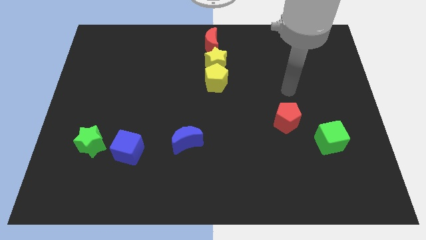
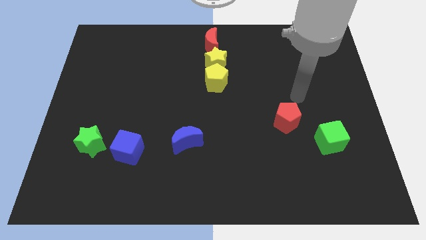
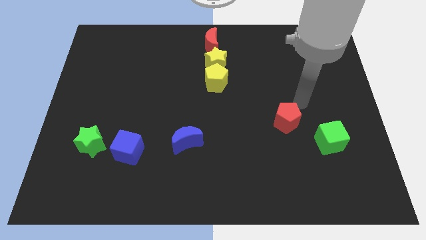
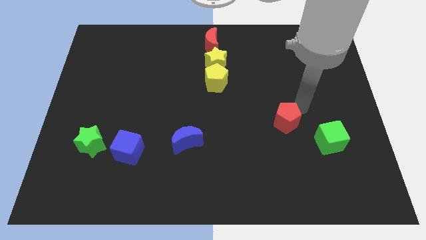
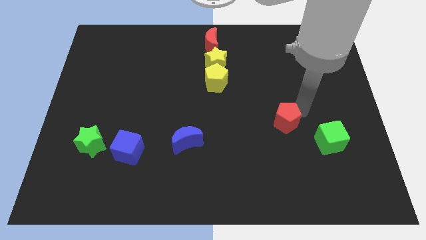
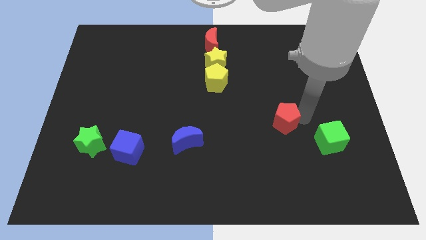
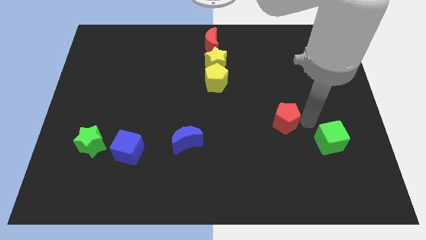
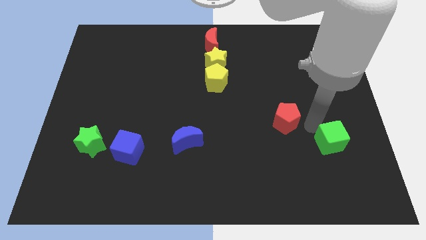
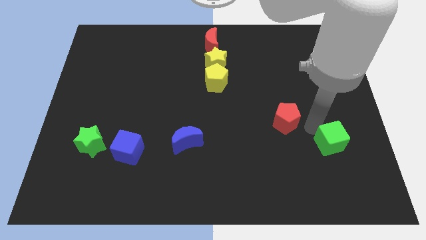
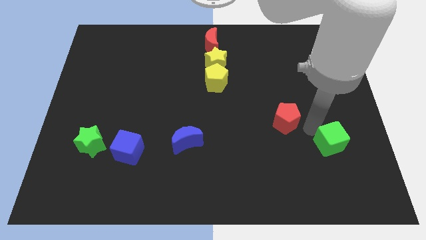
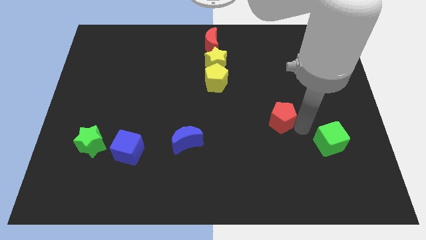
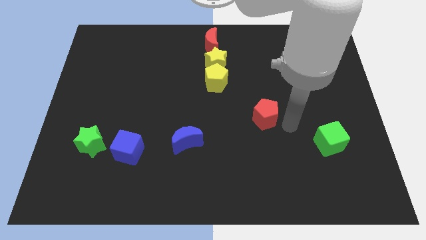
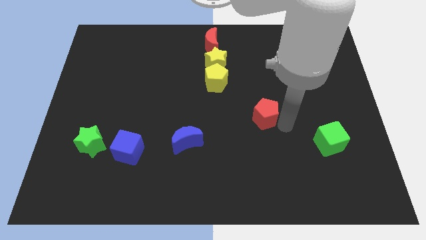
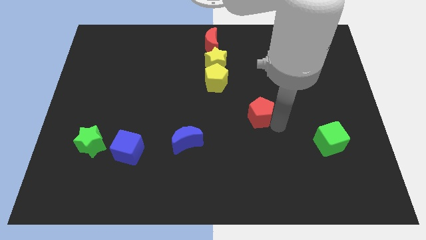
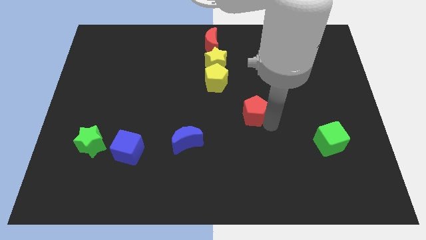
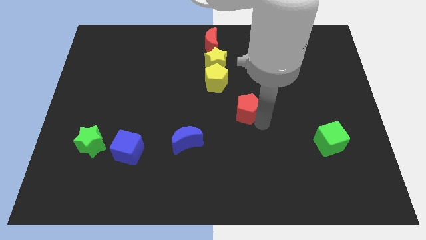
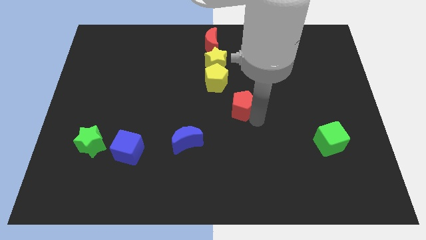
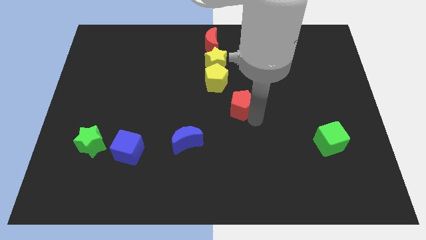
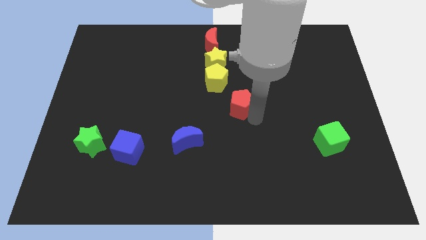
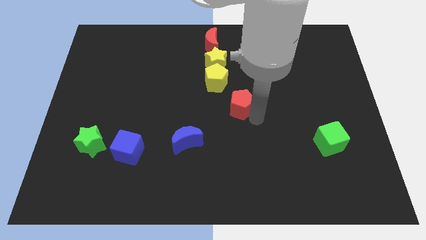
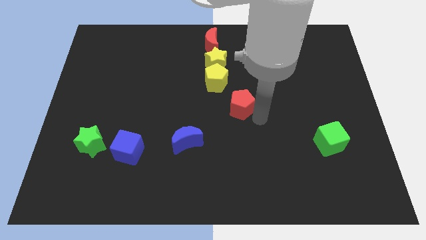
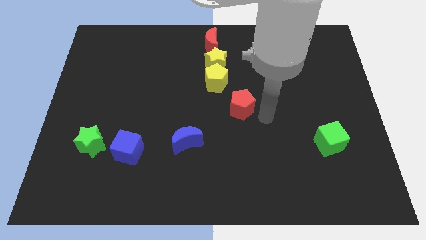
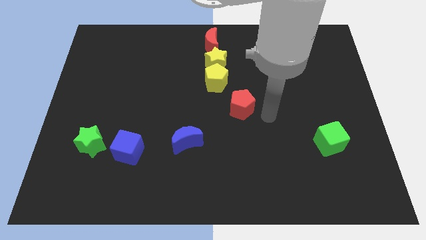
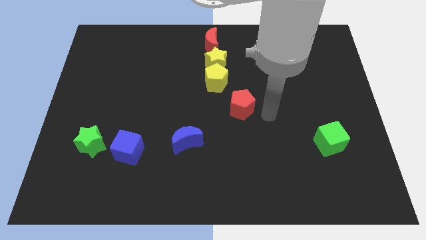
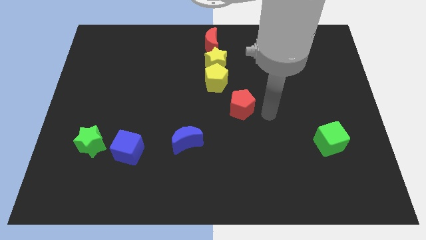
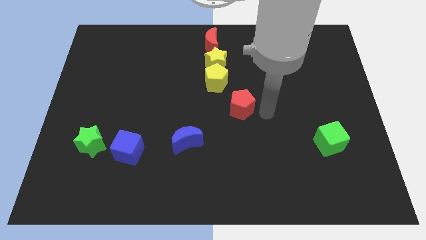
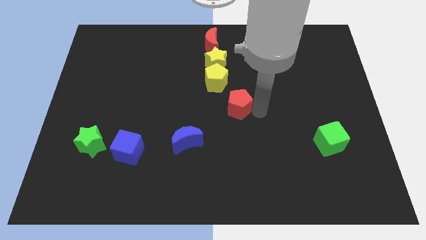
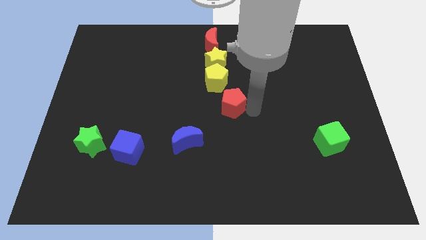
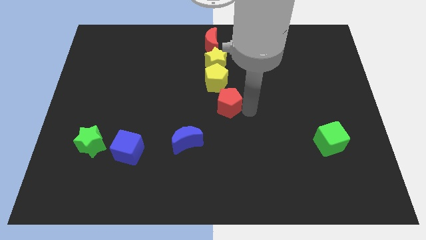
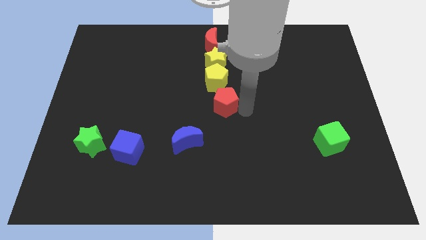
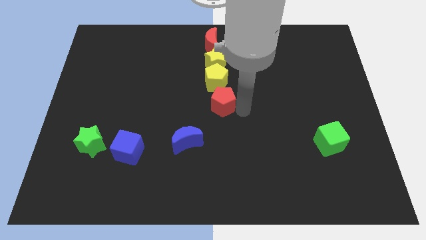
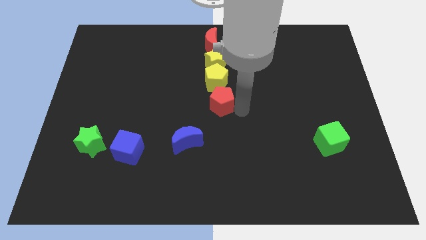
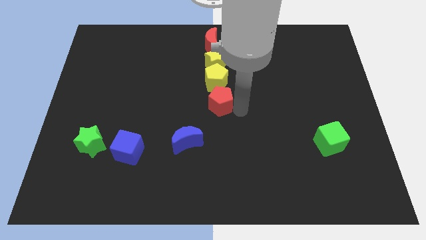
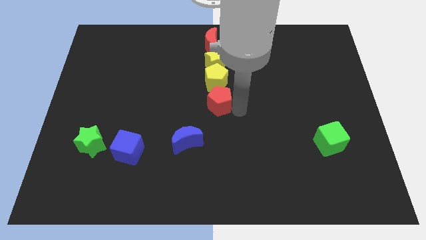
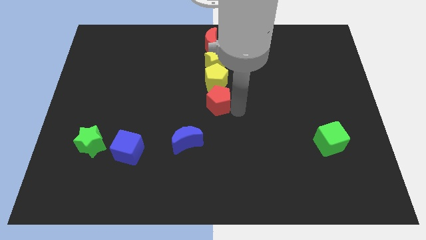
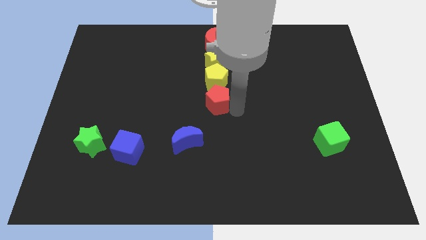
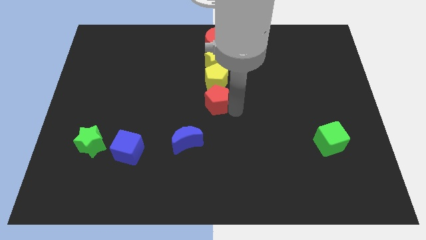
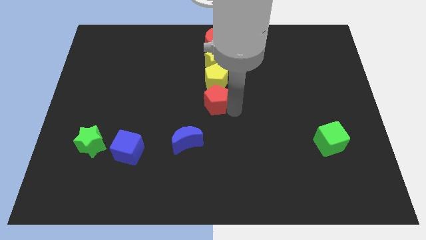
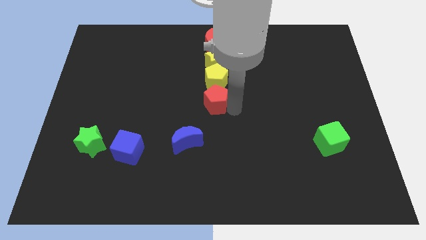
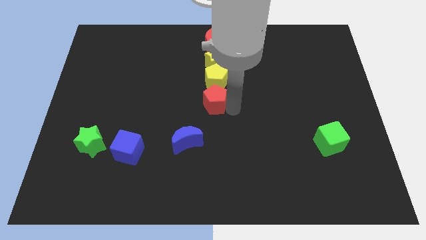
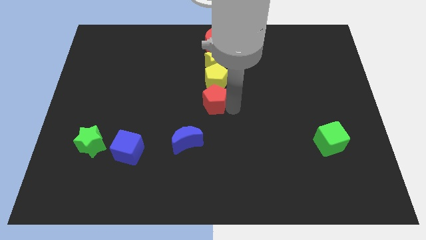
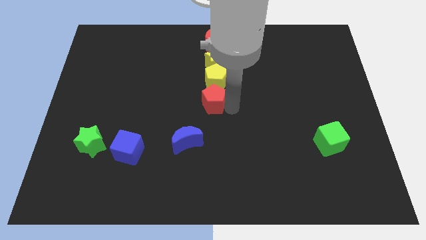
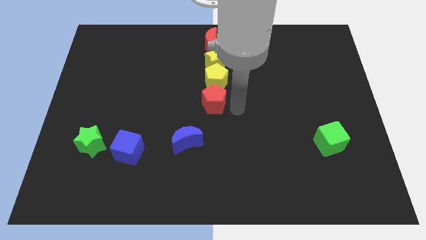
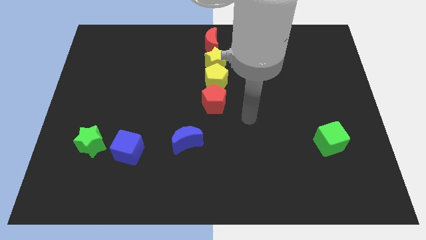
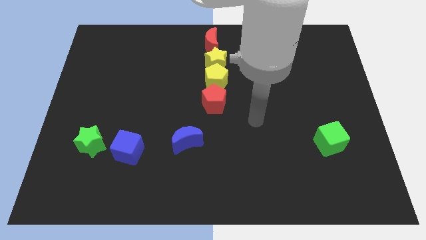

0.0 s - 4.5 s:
push the red pentagon to the bottom side of the yellow pentagon

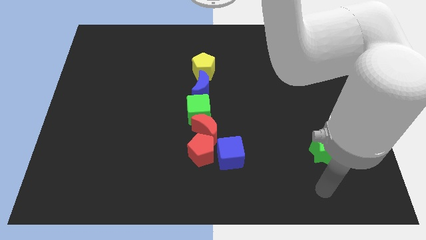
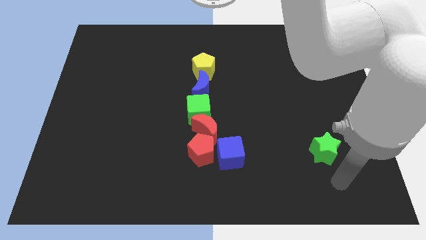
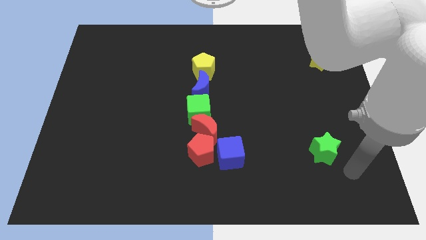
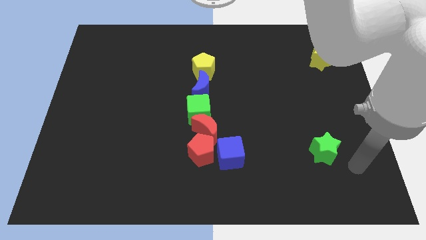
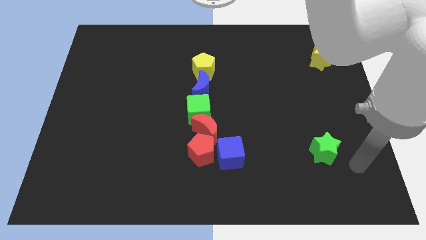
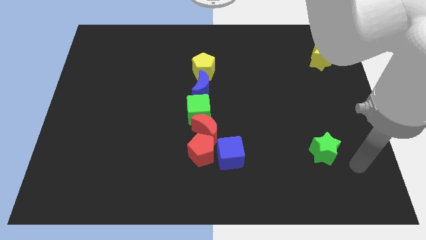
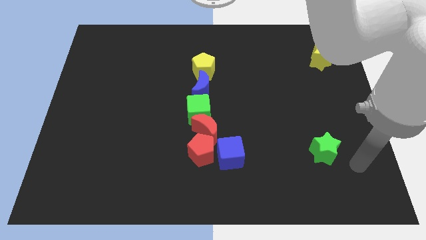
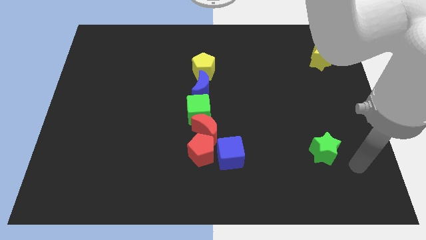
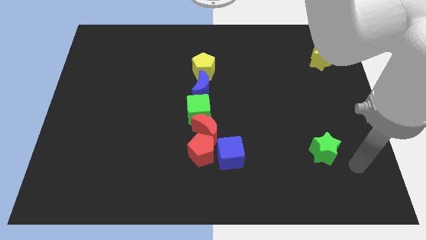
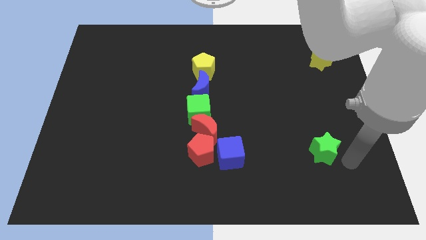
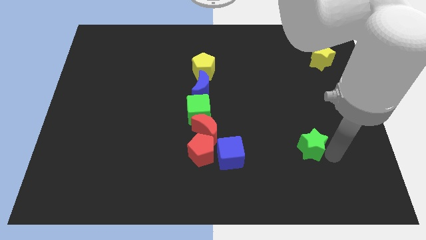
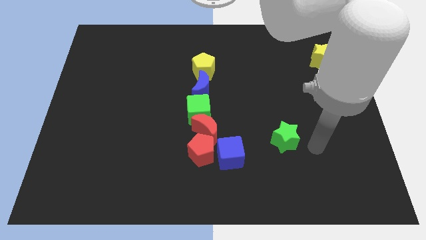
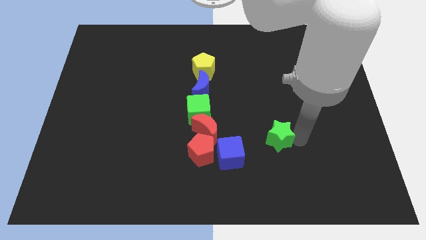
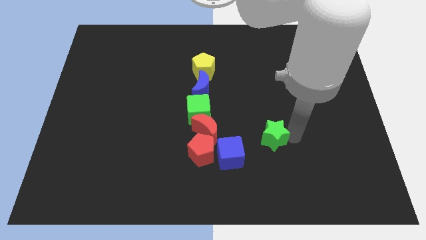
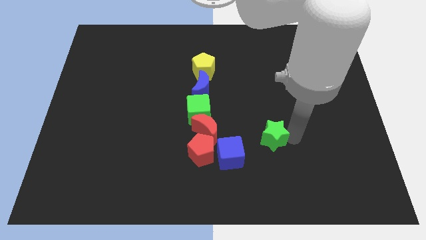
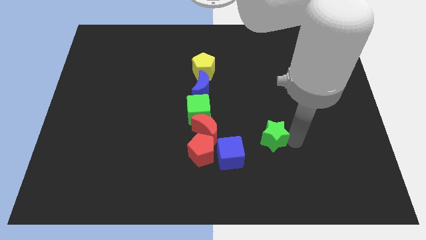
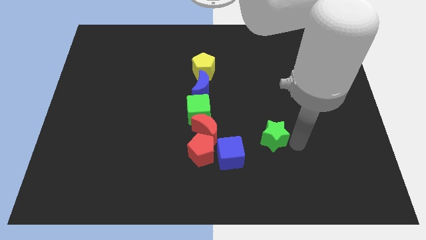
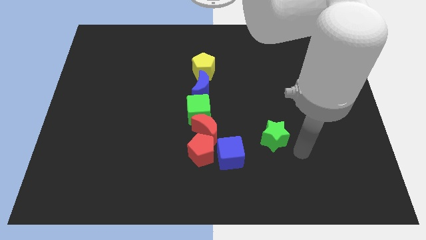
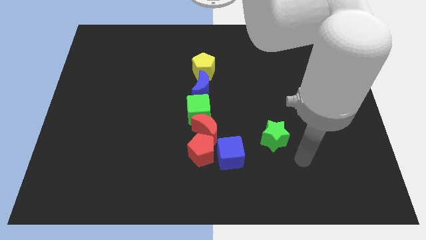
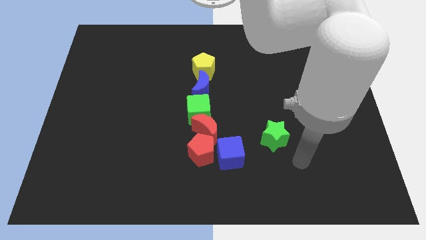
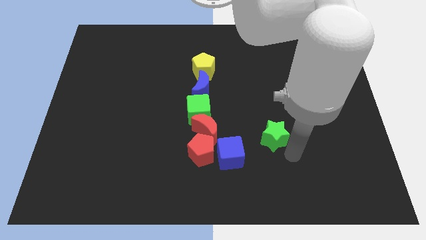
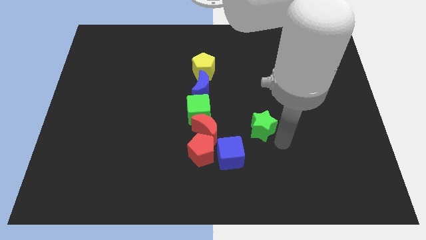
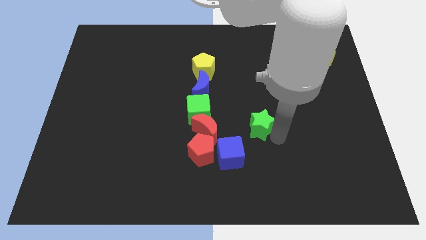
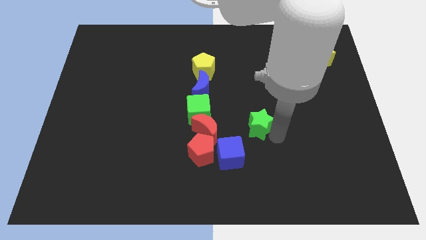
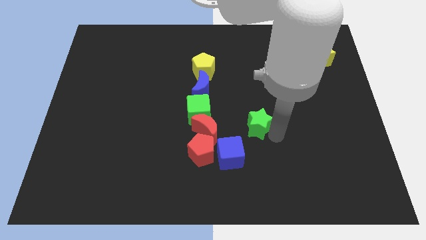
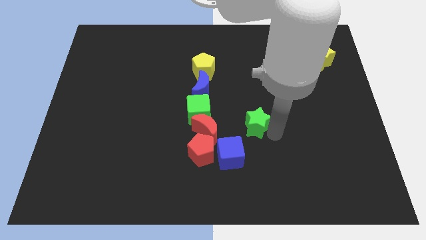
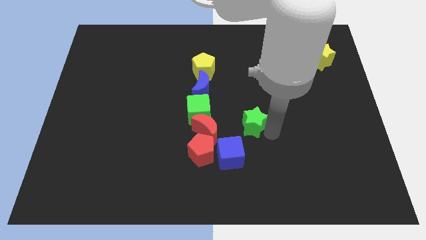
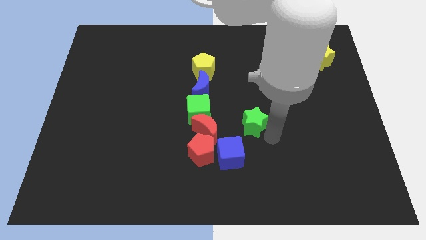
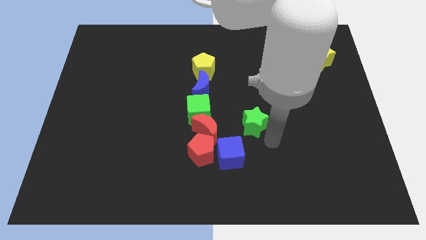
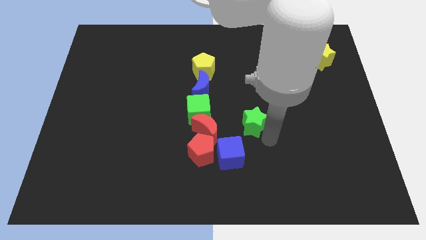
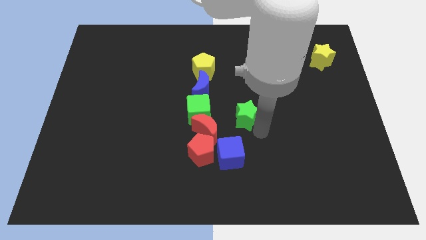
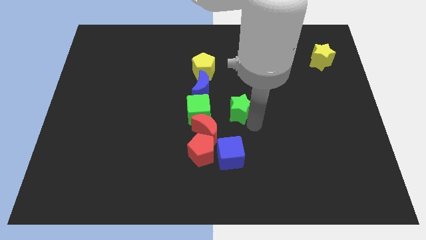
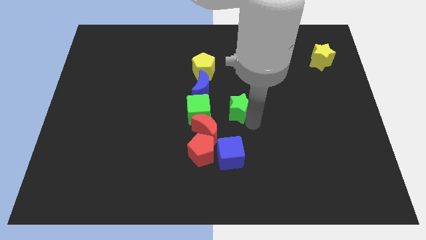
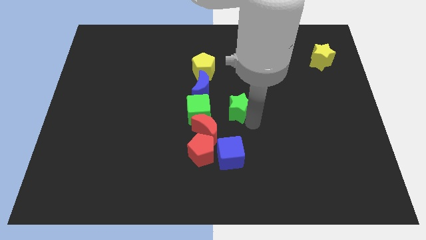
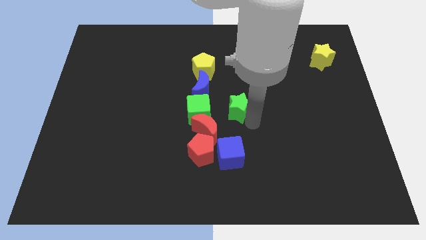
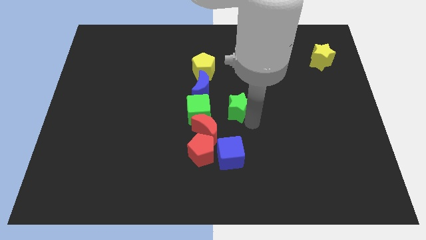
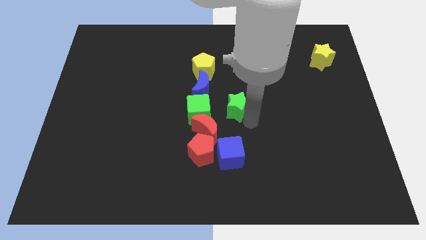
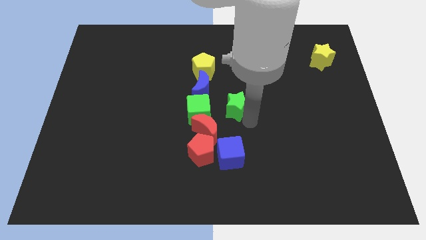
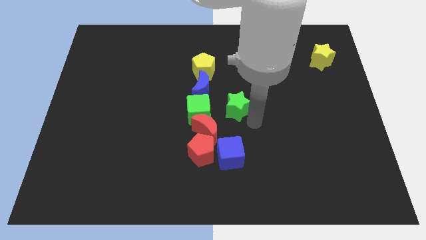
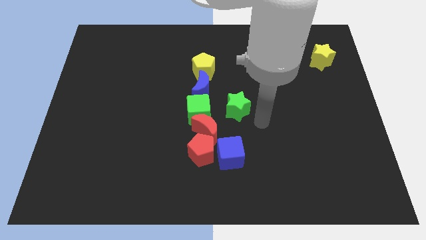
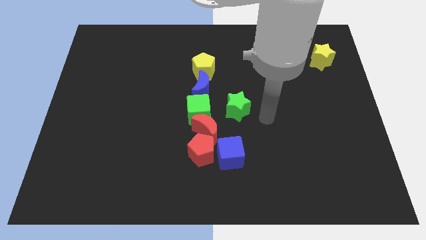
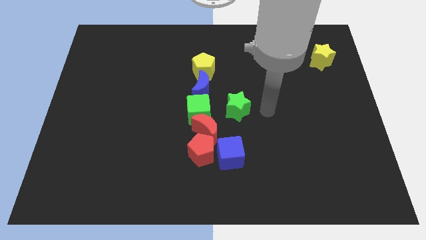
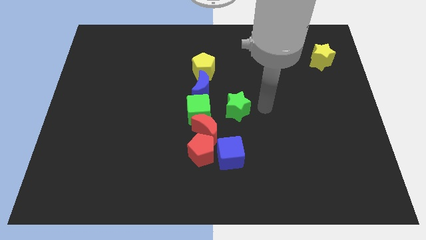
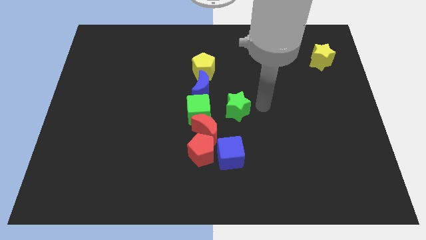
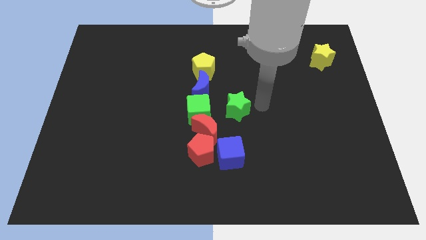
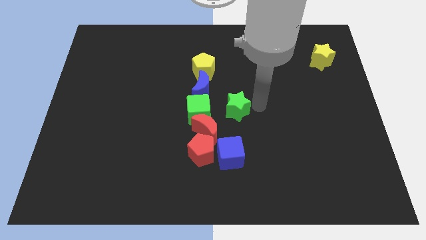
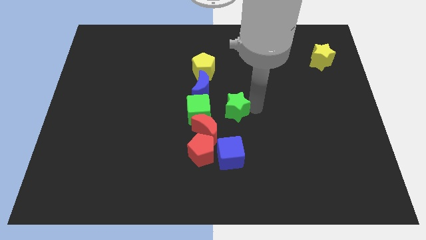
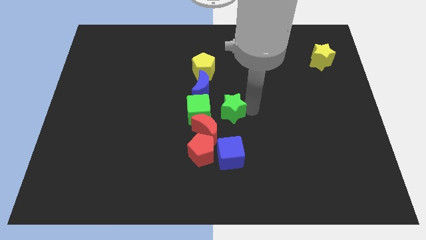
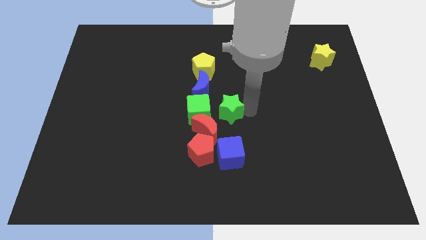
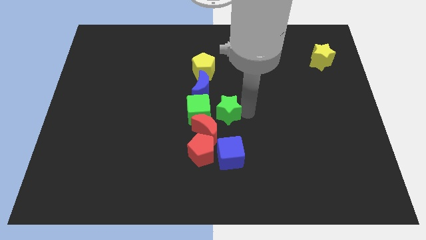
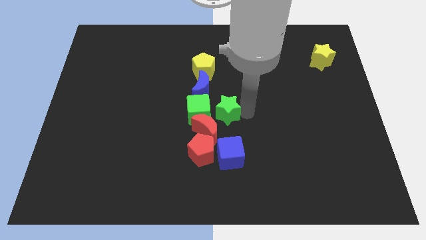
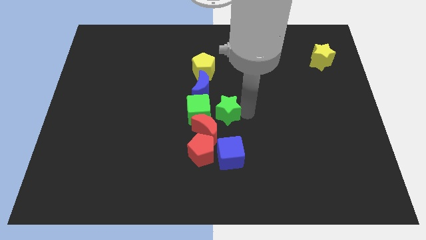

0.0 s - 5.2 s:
move the green star to the right of the green cube
